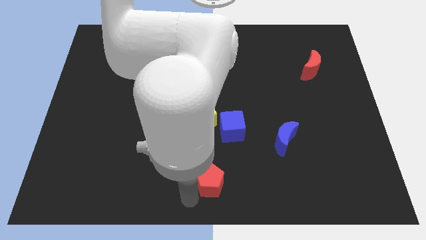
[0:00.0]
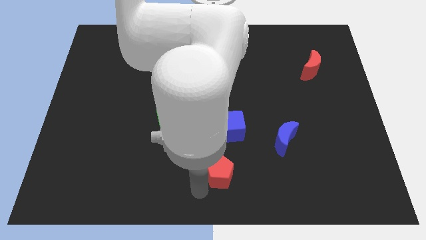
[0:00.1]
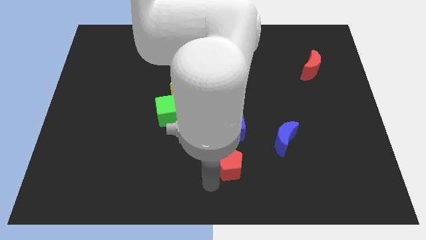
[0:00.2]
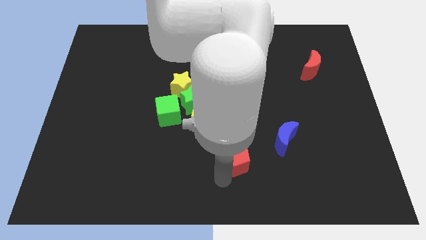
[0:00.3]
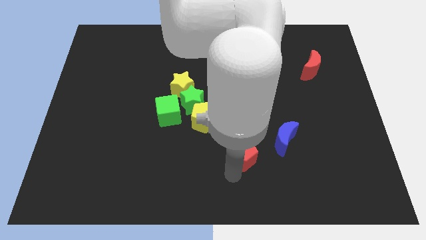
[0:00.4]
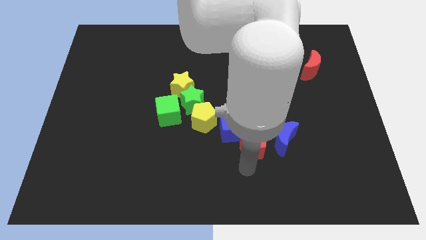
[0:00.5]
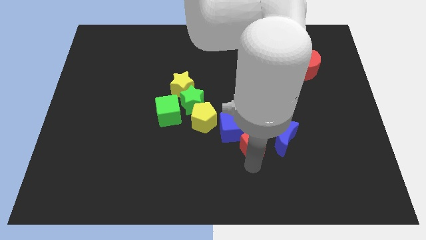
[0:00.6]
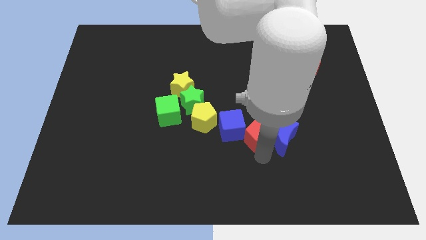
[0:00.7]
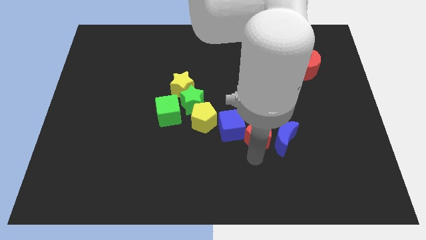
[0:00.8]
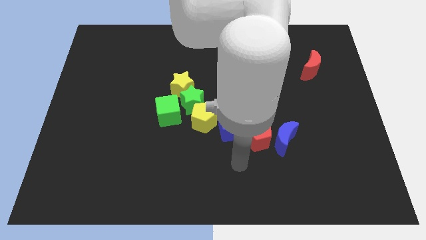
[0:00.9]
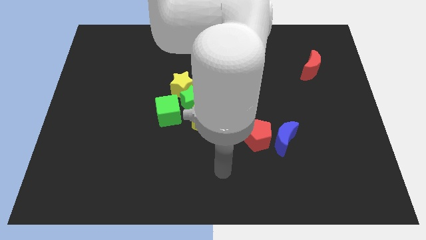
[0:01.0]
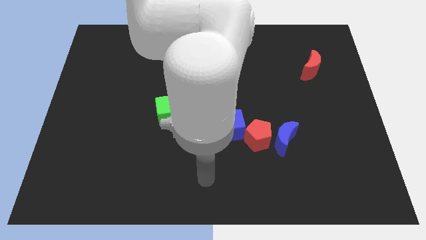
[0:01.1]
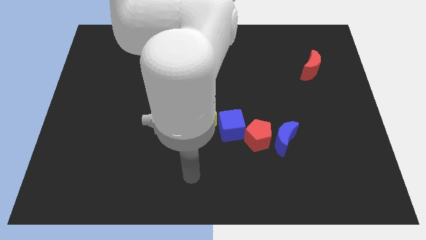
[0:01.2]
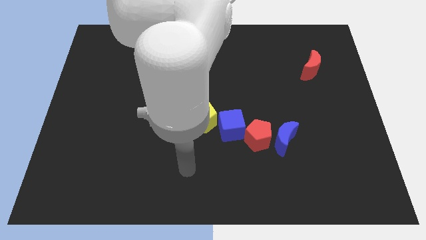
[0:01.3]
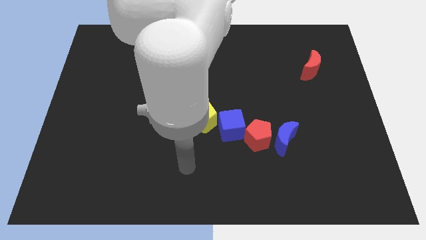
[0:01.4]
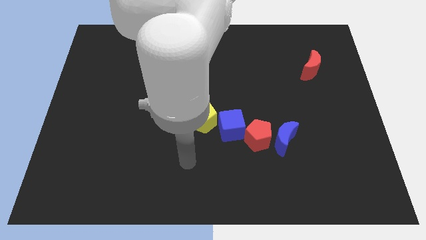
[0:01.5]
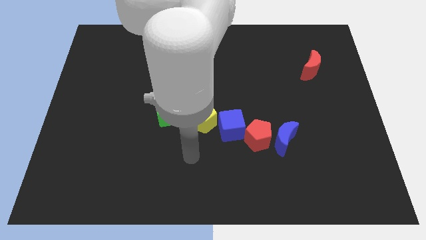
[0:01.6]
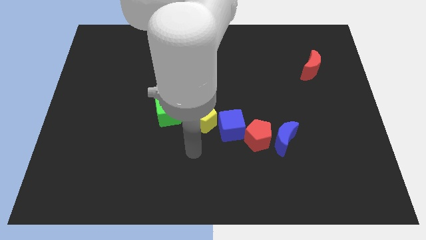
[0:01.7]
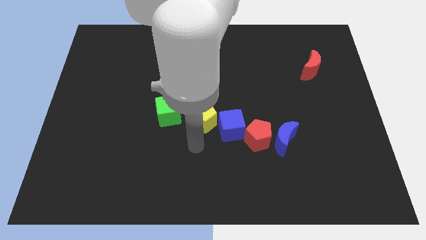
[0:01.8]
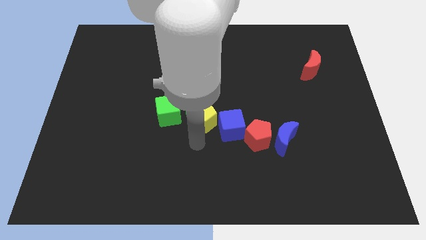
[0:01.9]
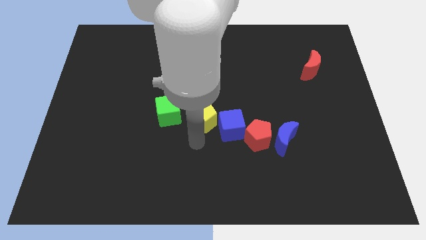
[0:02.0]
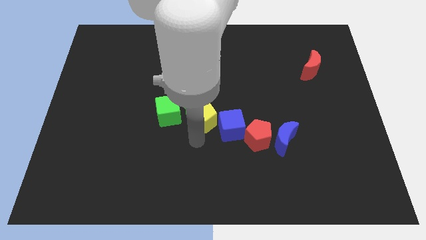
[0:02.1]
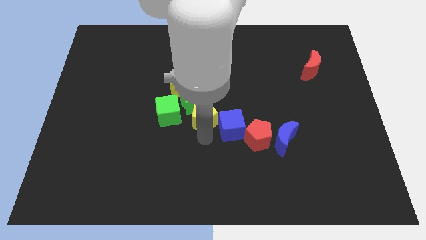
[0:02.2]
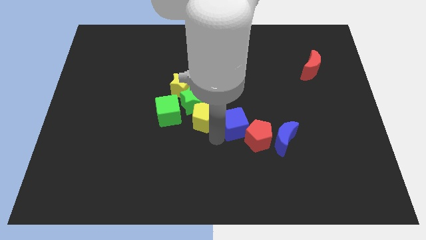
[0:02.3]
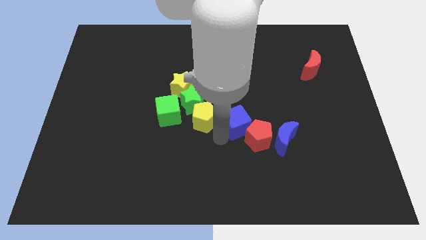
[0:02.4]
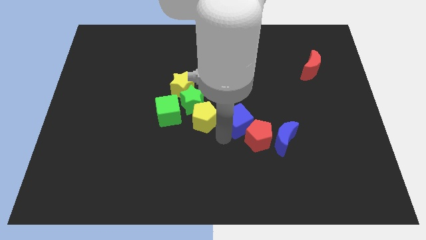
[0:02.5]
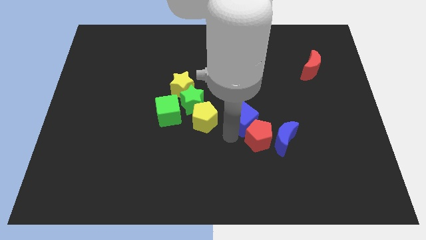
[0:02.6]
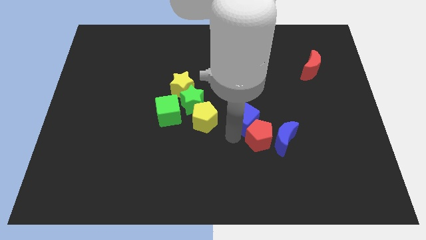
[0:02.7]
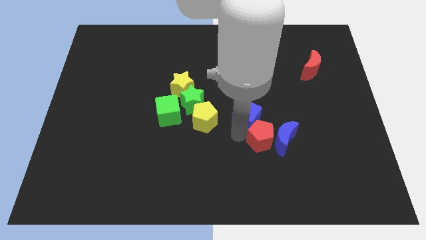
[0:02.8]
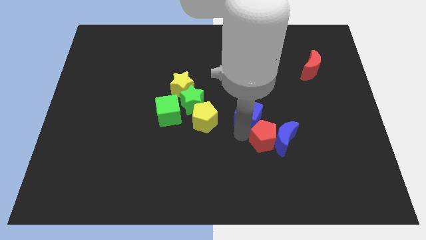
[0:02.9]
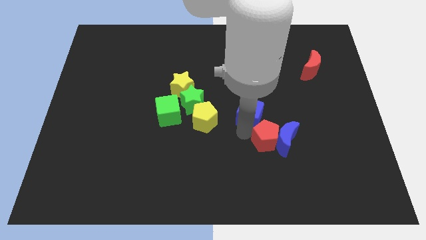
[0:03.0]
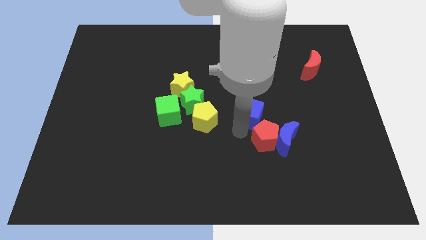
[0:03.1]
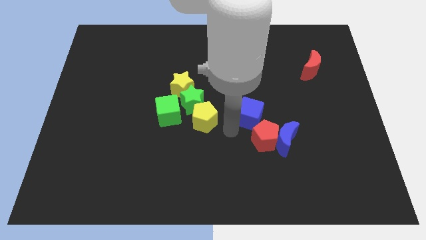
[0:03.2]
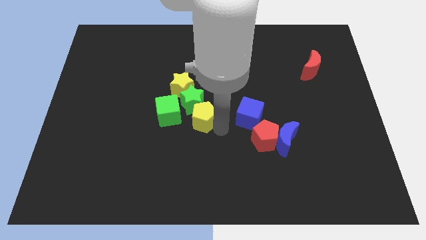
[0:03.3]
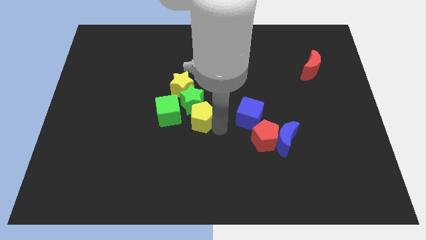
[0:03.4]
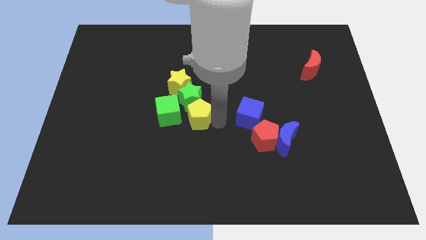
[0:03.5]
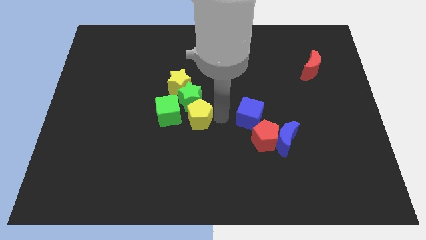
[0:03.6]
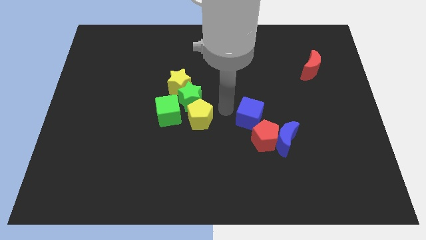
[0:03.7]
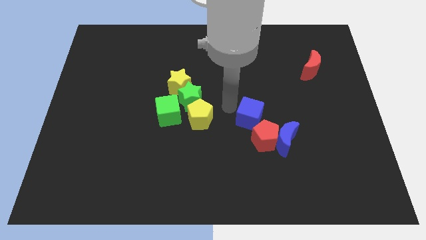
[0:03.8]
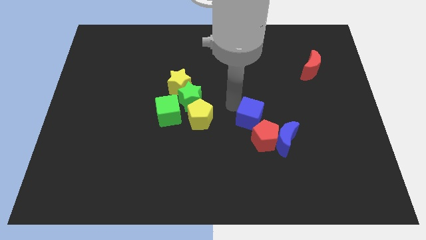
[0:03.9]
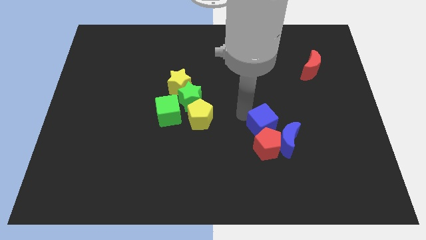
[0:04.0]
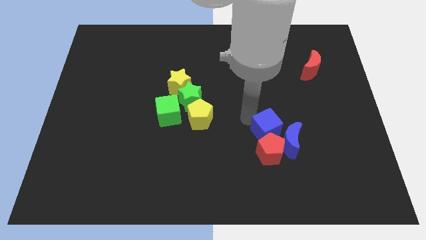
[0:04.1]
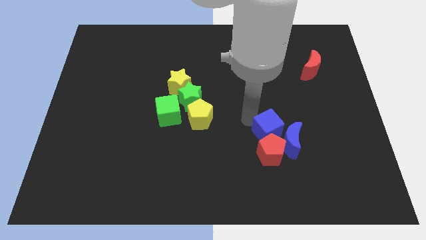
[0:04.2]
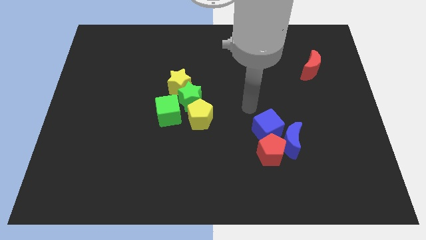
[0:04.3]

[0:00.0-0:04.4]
separate the green yellow blocks from the blue red blocks

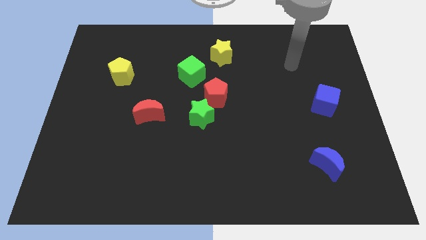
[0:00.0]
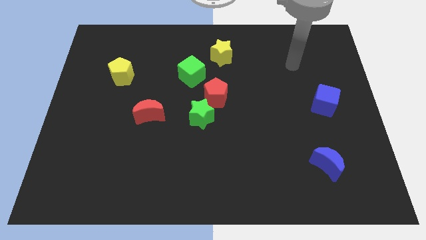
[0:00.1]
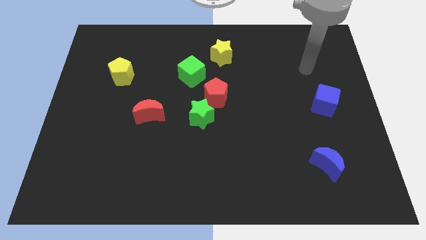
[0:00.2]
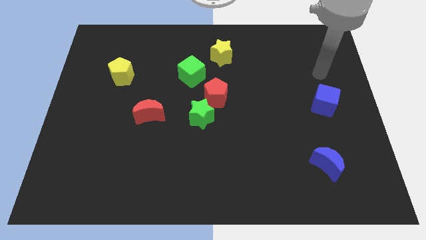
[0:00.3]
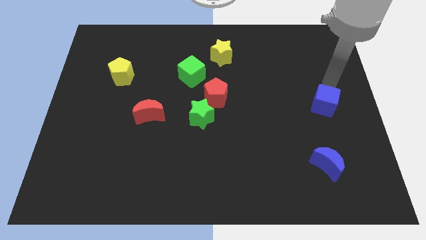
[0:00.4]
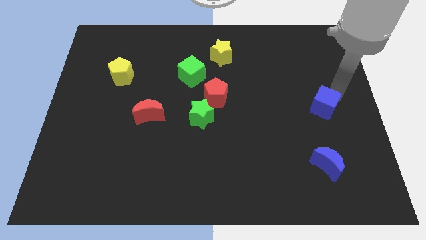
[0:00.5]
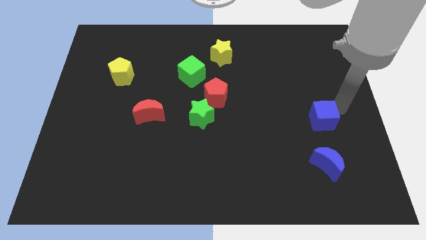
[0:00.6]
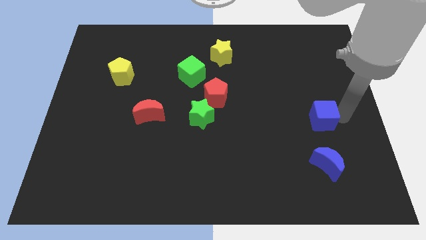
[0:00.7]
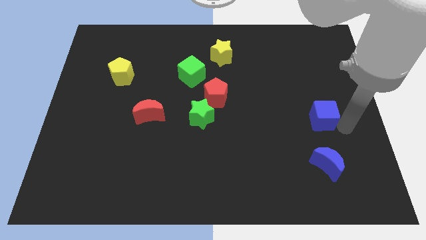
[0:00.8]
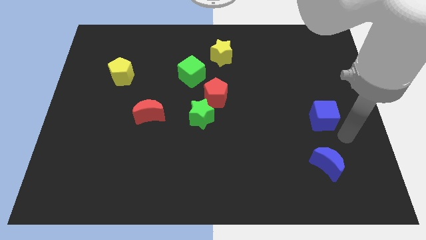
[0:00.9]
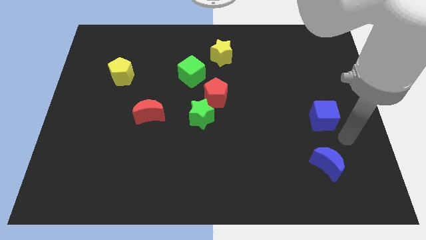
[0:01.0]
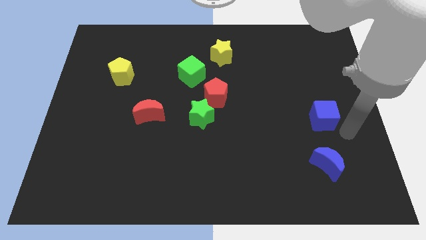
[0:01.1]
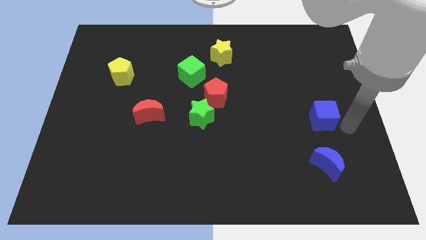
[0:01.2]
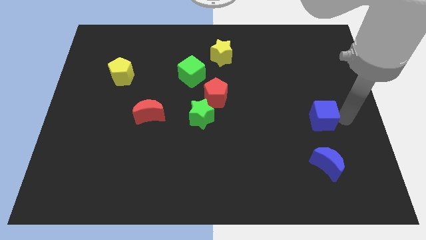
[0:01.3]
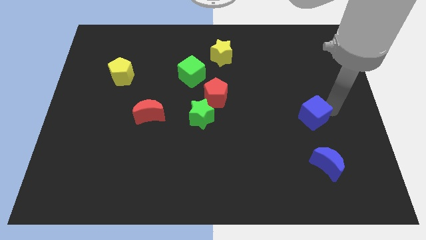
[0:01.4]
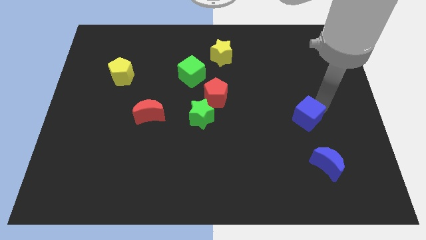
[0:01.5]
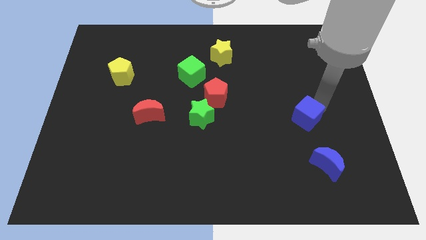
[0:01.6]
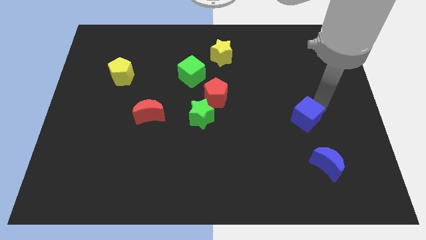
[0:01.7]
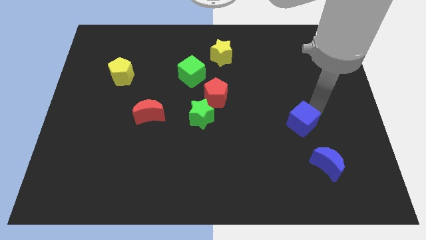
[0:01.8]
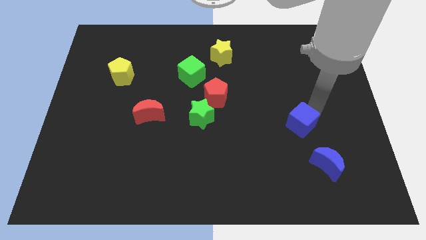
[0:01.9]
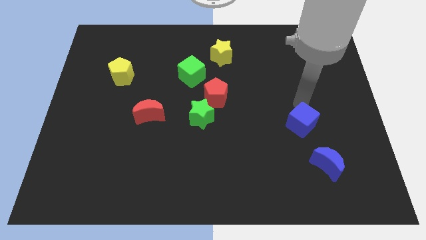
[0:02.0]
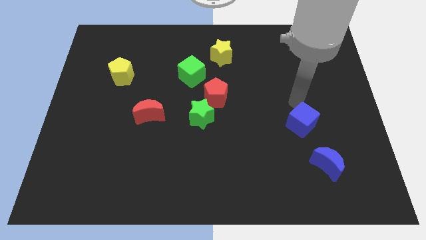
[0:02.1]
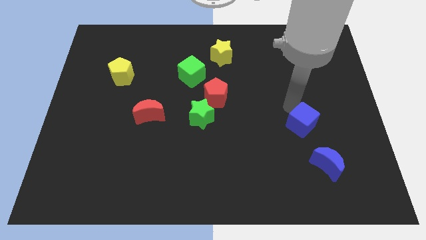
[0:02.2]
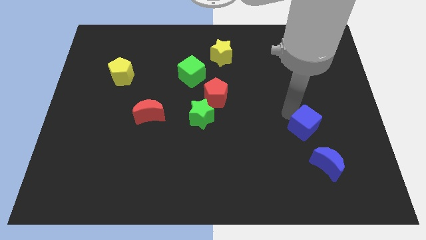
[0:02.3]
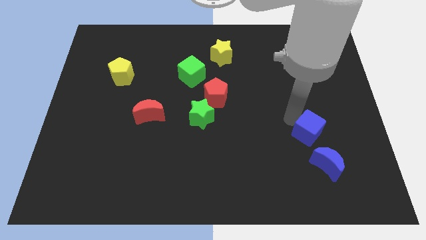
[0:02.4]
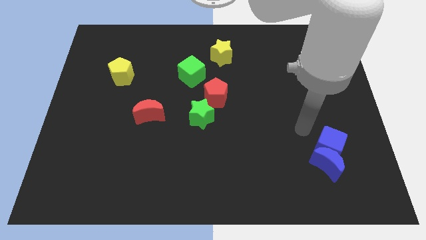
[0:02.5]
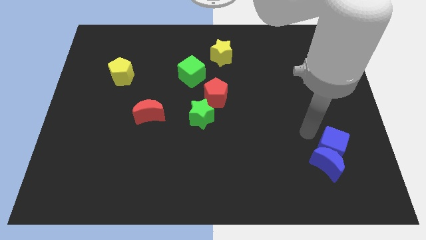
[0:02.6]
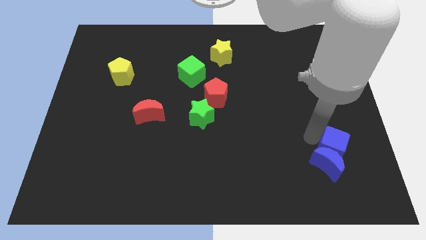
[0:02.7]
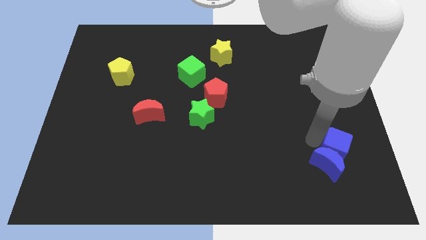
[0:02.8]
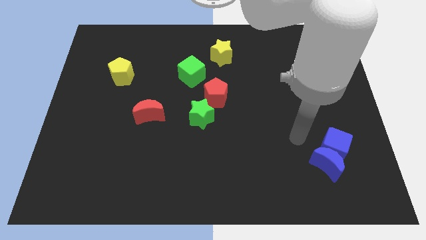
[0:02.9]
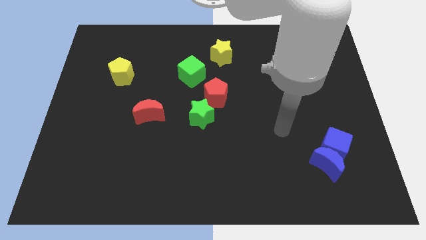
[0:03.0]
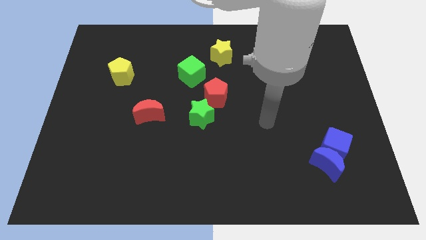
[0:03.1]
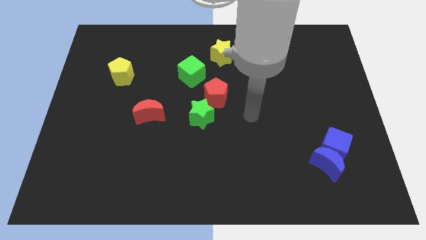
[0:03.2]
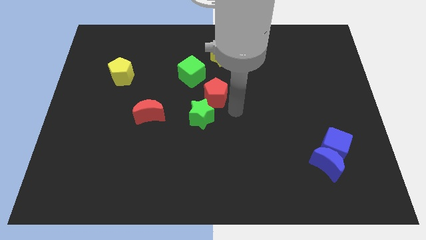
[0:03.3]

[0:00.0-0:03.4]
move the blue cube towards the bottom right corner of the board

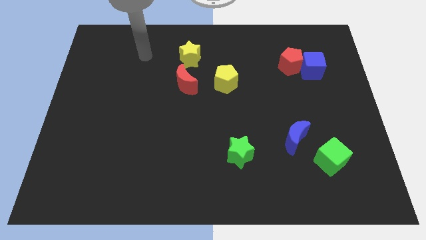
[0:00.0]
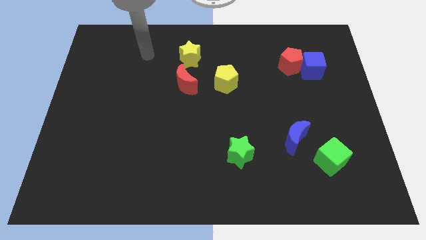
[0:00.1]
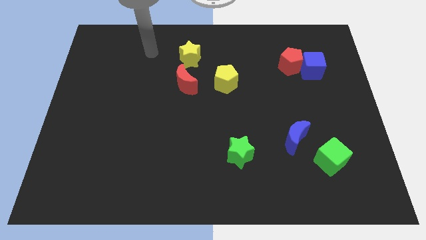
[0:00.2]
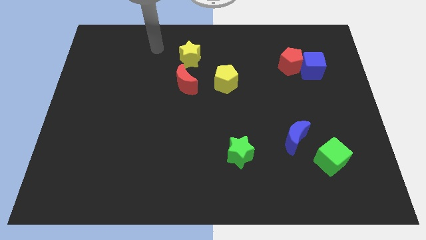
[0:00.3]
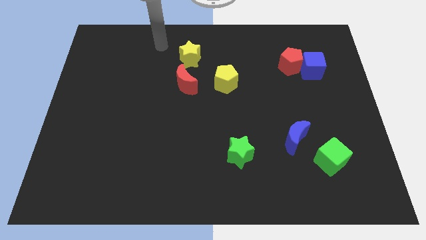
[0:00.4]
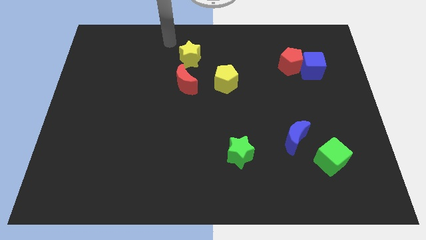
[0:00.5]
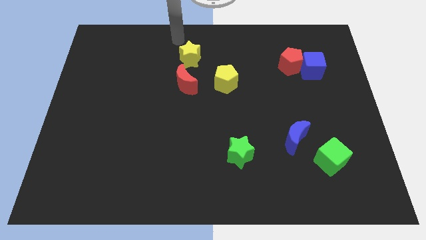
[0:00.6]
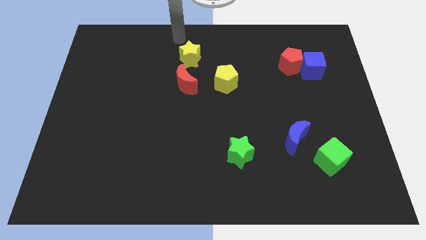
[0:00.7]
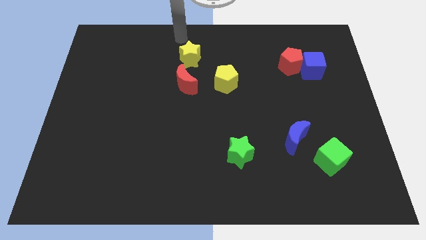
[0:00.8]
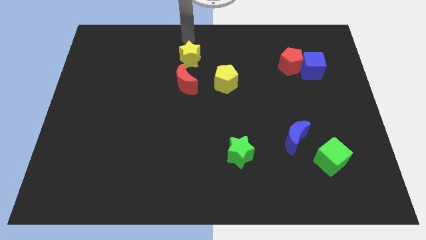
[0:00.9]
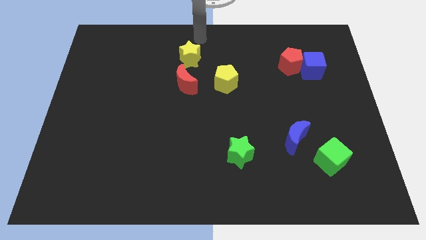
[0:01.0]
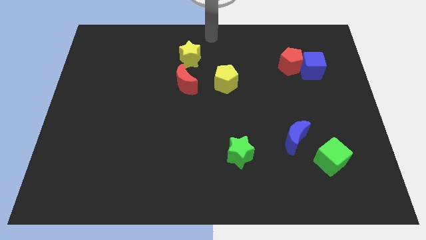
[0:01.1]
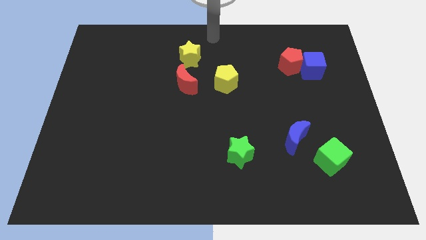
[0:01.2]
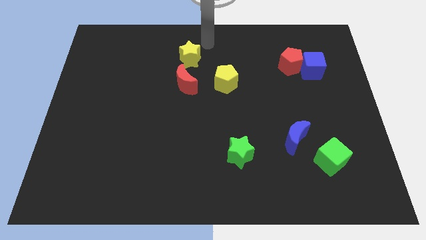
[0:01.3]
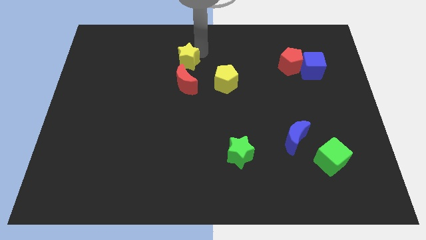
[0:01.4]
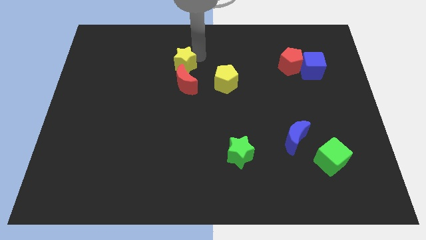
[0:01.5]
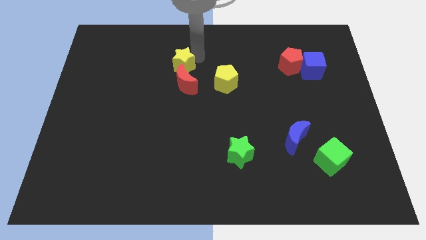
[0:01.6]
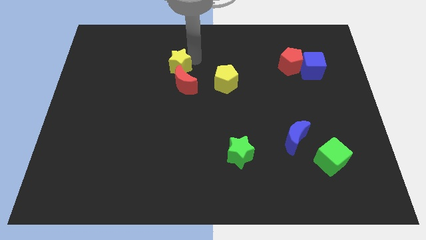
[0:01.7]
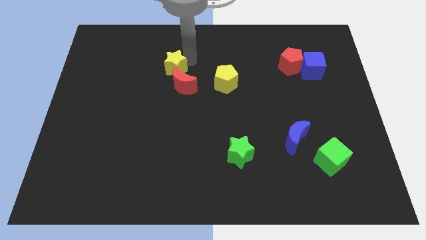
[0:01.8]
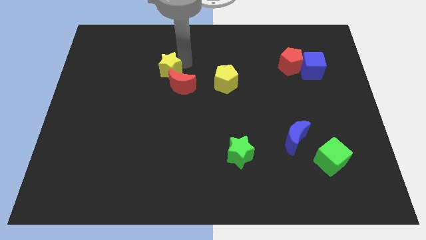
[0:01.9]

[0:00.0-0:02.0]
push the yellow star into red crescent
